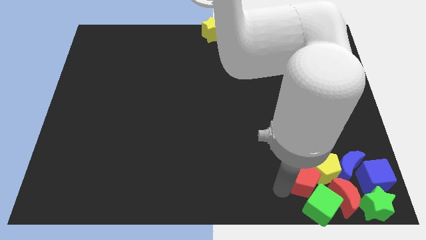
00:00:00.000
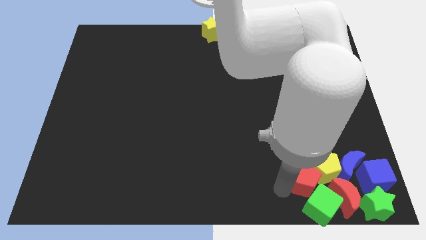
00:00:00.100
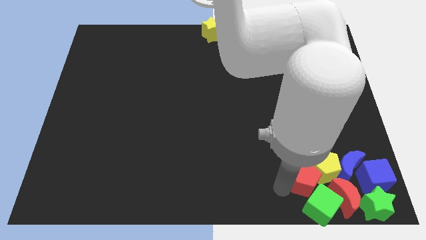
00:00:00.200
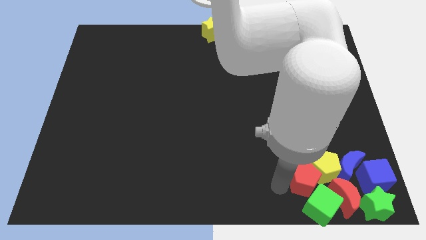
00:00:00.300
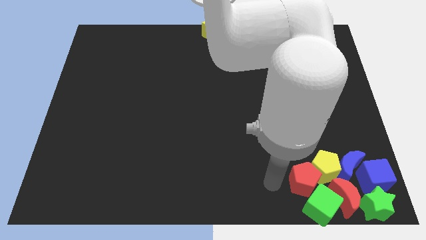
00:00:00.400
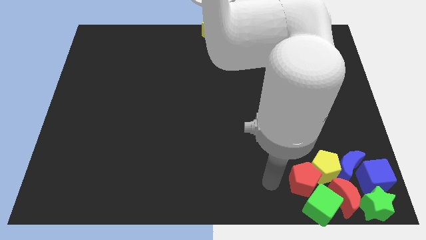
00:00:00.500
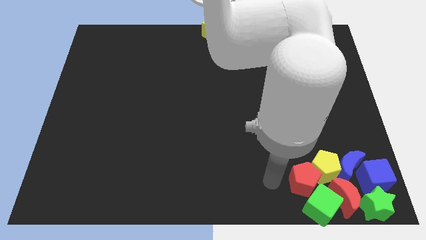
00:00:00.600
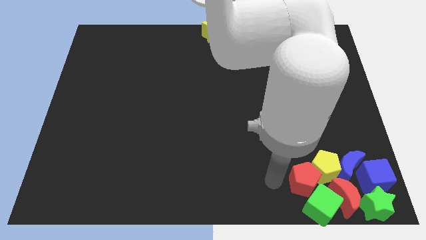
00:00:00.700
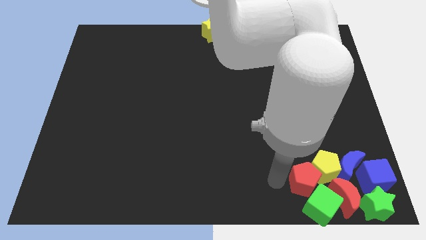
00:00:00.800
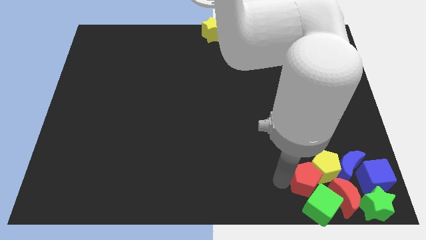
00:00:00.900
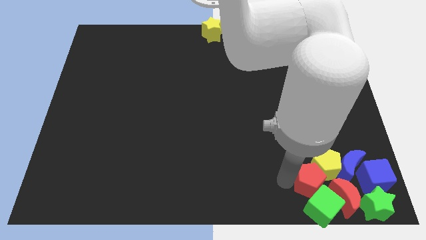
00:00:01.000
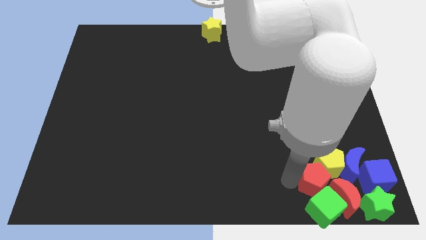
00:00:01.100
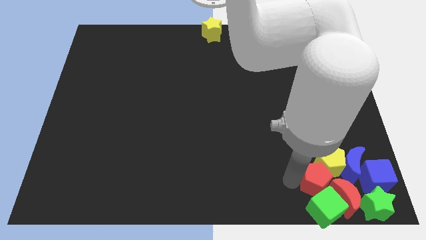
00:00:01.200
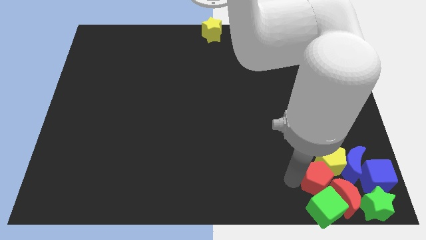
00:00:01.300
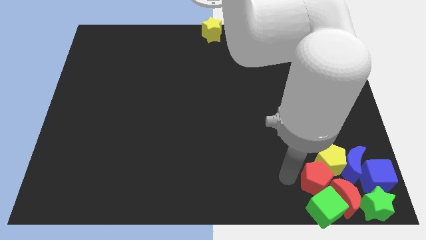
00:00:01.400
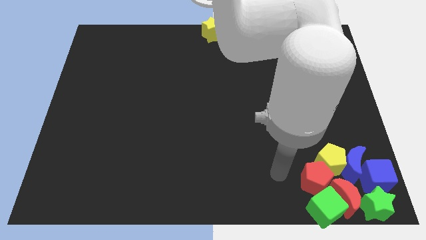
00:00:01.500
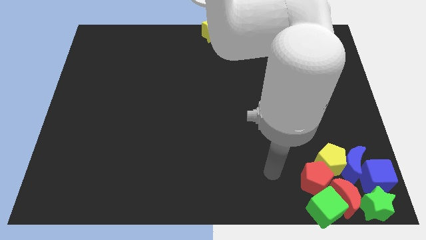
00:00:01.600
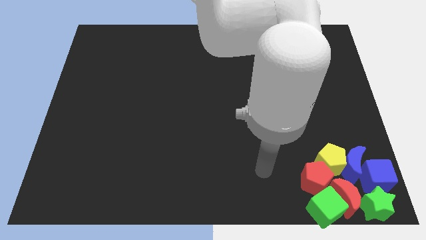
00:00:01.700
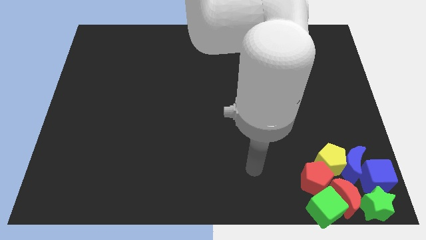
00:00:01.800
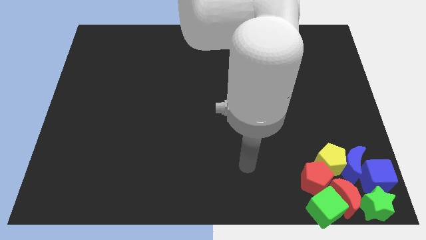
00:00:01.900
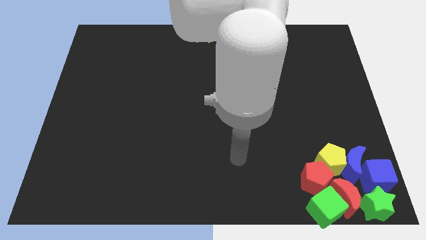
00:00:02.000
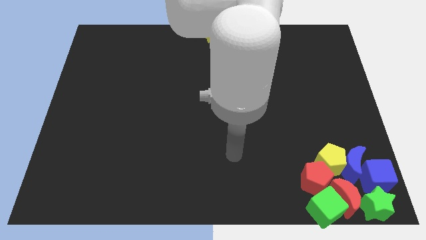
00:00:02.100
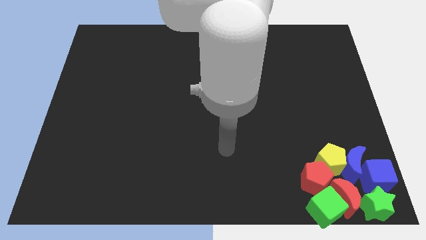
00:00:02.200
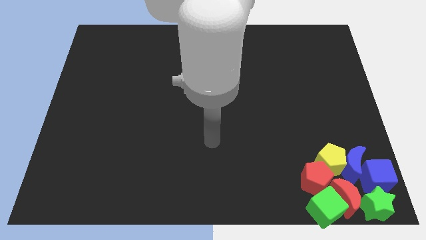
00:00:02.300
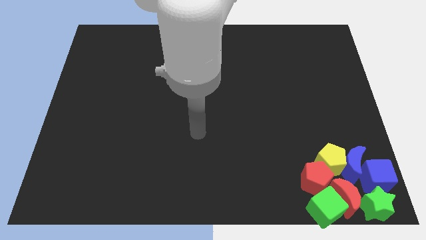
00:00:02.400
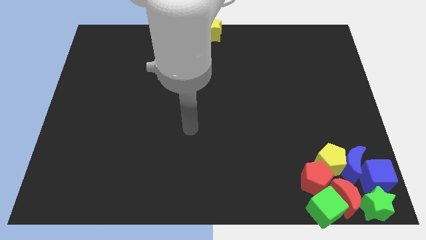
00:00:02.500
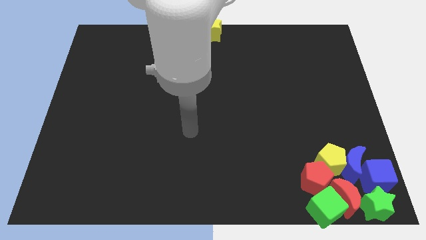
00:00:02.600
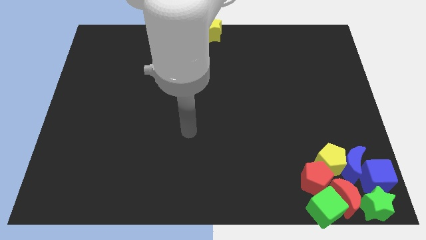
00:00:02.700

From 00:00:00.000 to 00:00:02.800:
push red pentagon in to group of blocks

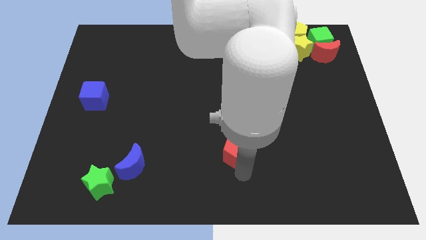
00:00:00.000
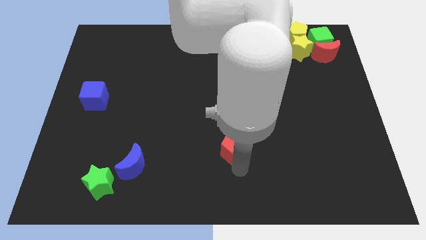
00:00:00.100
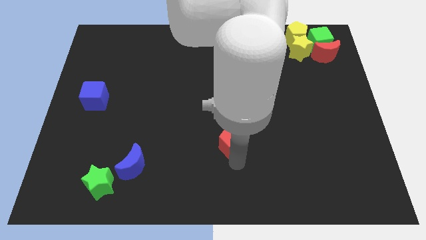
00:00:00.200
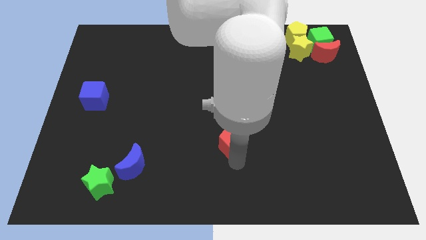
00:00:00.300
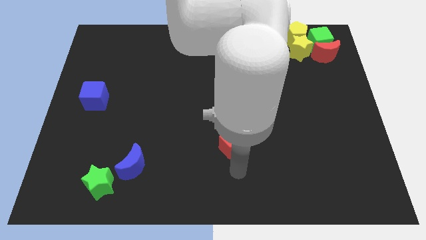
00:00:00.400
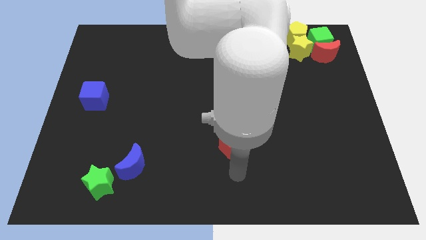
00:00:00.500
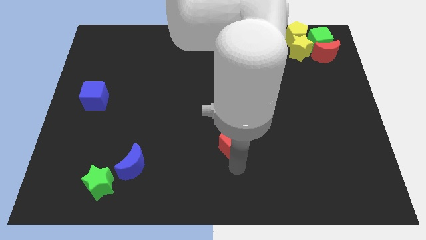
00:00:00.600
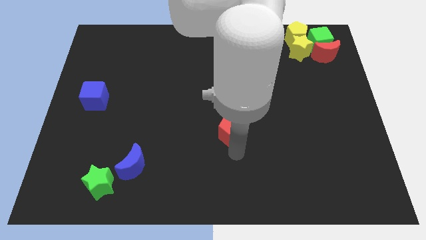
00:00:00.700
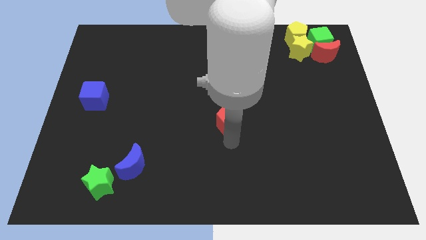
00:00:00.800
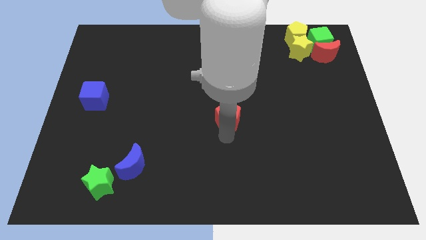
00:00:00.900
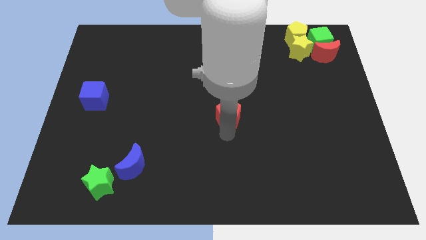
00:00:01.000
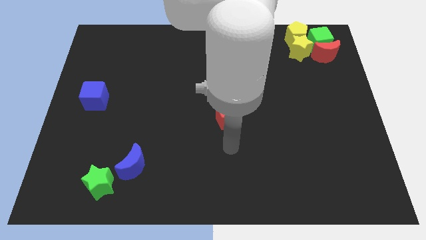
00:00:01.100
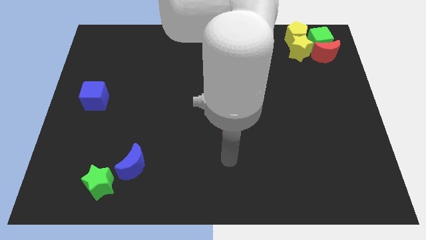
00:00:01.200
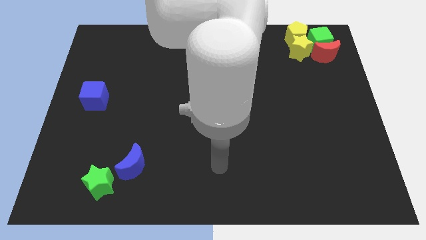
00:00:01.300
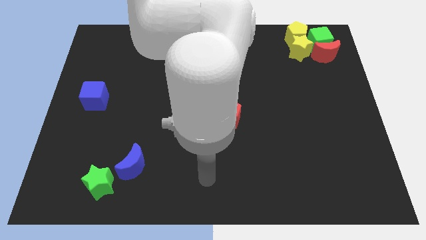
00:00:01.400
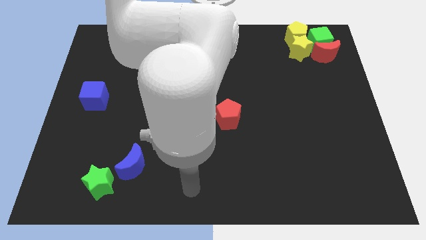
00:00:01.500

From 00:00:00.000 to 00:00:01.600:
push red pentagon towards the center of the board

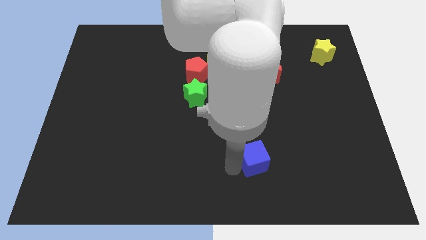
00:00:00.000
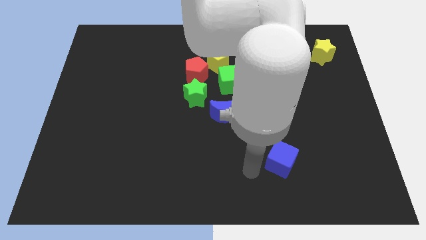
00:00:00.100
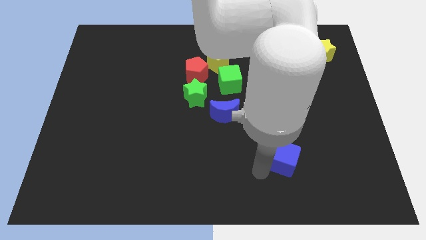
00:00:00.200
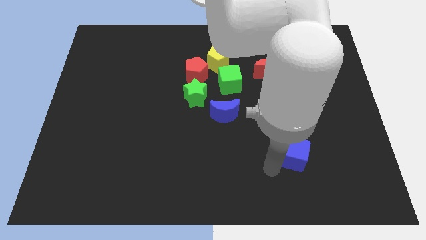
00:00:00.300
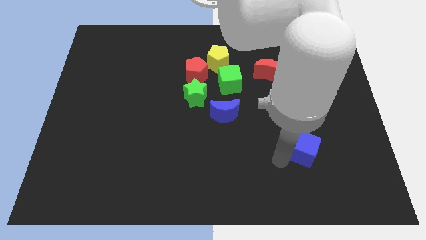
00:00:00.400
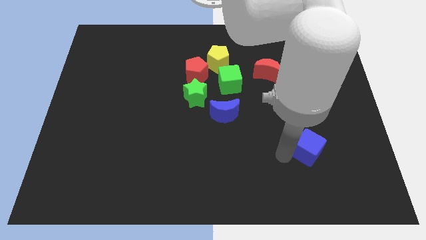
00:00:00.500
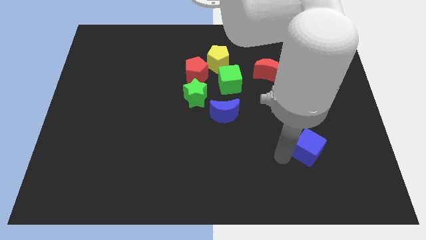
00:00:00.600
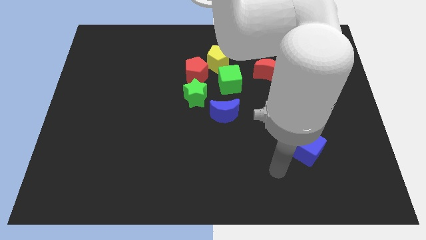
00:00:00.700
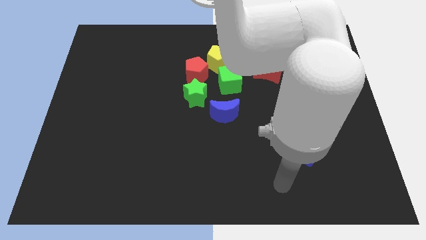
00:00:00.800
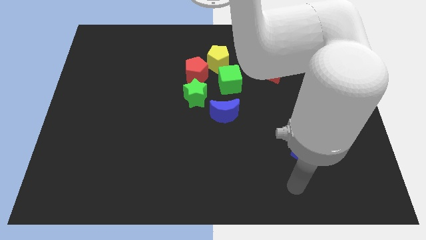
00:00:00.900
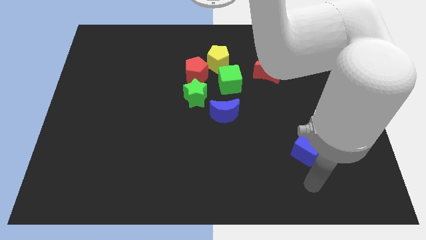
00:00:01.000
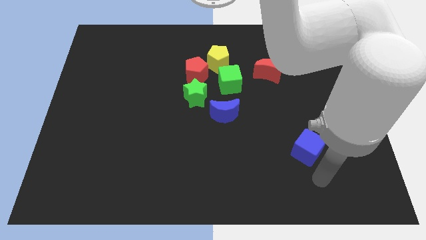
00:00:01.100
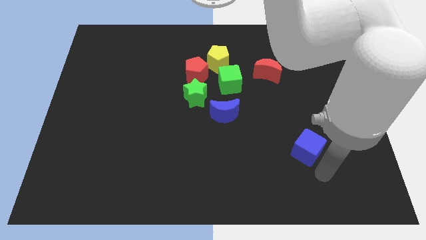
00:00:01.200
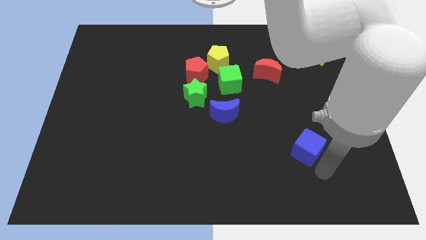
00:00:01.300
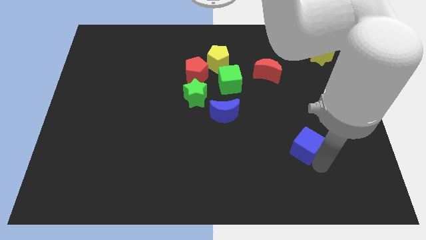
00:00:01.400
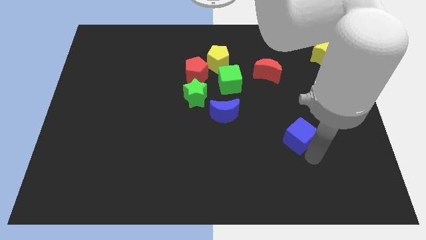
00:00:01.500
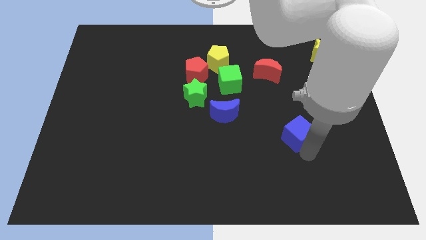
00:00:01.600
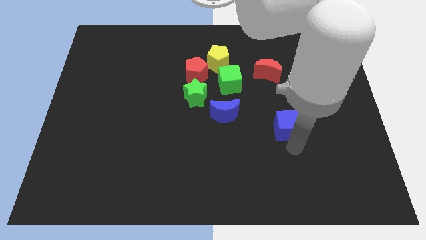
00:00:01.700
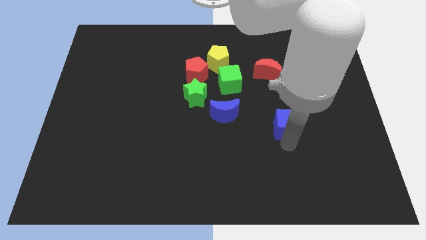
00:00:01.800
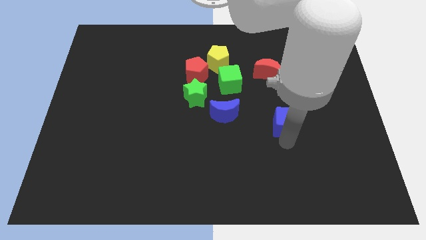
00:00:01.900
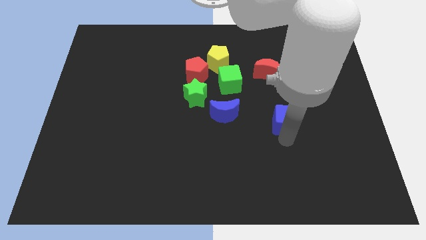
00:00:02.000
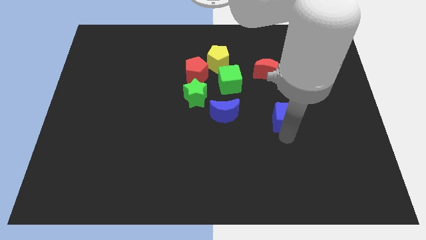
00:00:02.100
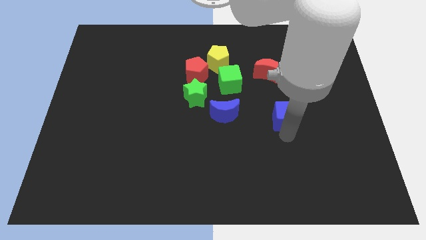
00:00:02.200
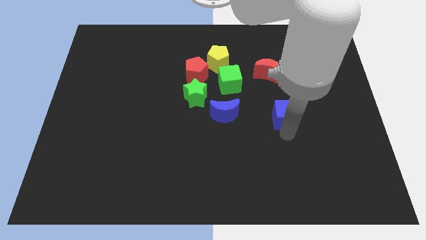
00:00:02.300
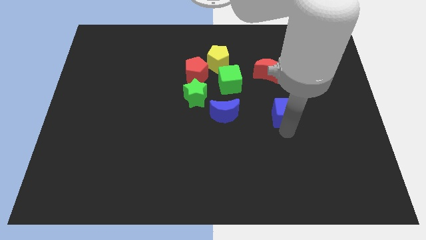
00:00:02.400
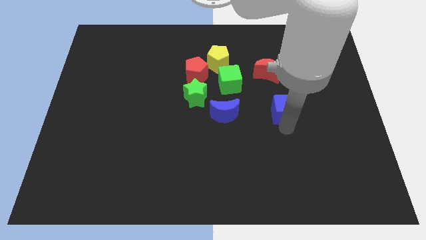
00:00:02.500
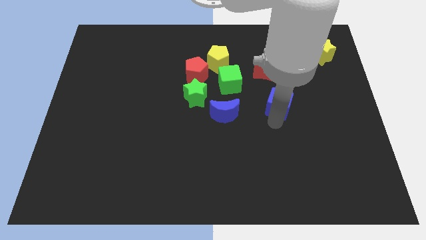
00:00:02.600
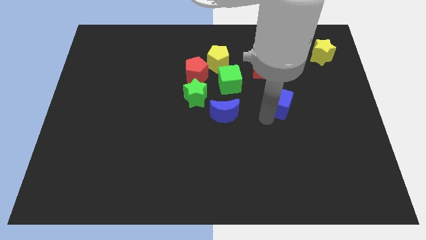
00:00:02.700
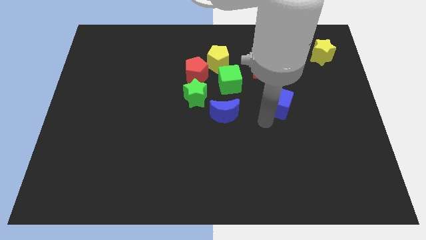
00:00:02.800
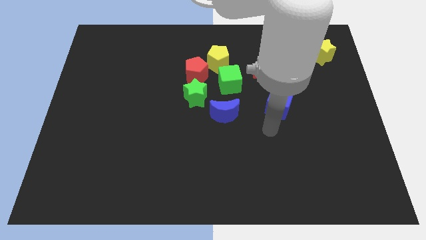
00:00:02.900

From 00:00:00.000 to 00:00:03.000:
push the blue cube below the red crescent

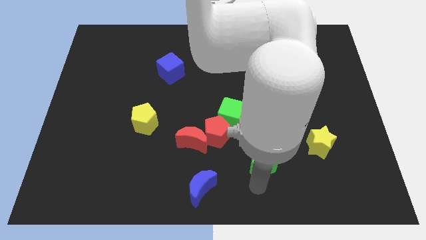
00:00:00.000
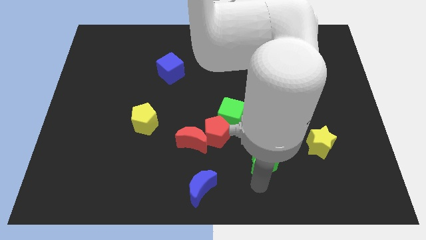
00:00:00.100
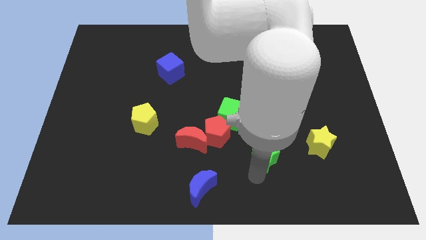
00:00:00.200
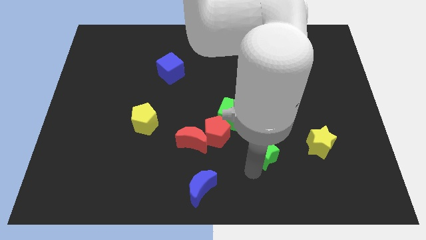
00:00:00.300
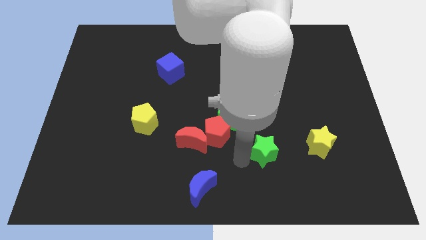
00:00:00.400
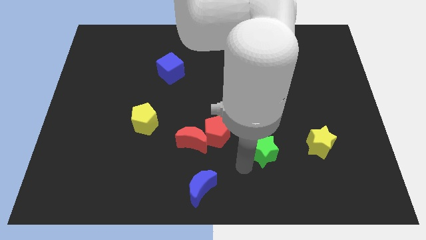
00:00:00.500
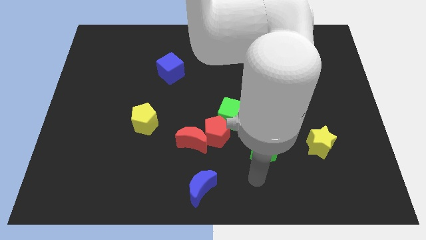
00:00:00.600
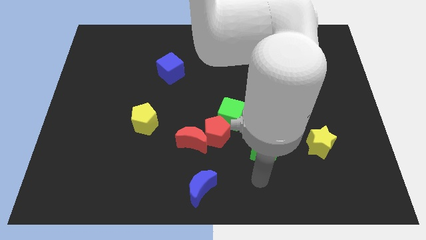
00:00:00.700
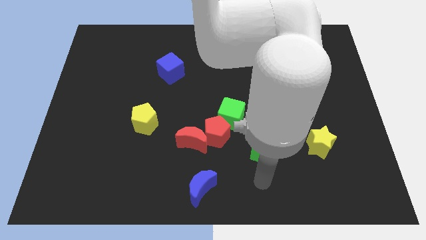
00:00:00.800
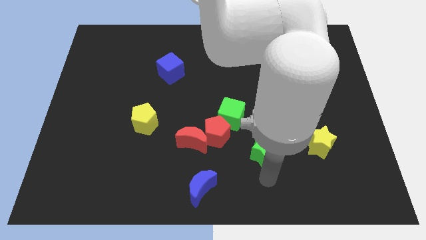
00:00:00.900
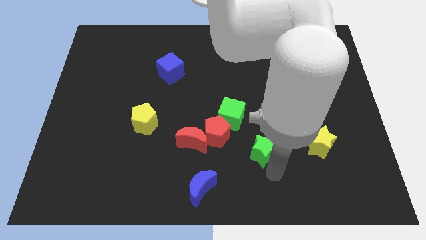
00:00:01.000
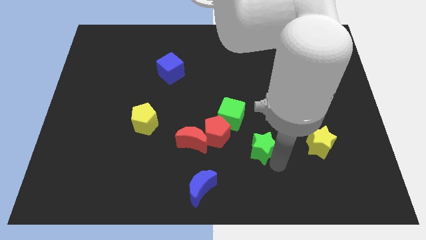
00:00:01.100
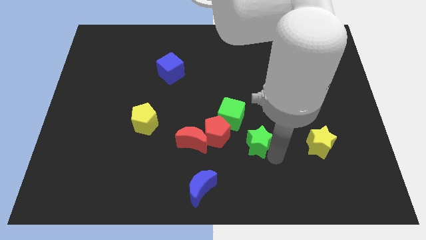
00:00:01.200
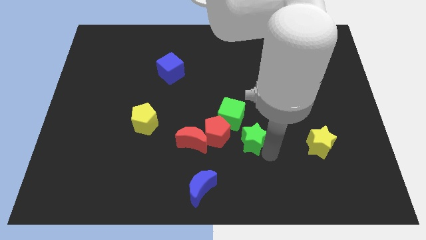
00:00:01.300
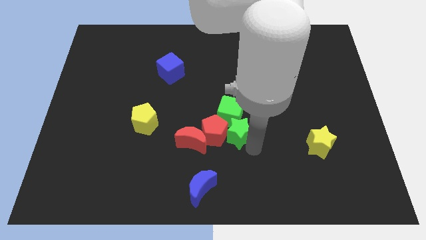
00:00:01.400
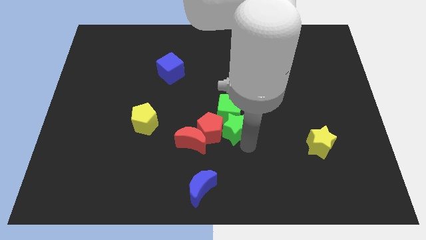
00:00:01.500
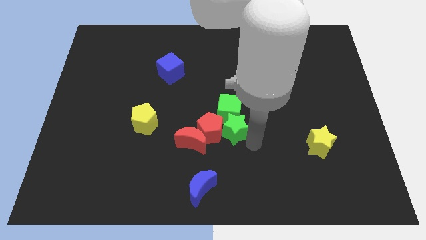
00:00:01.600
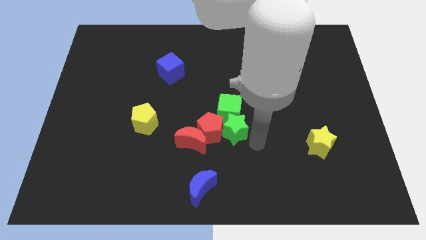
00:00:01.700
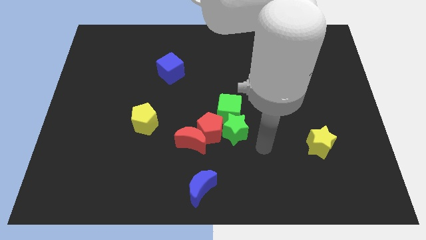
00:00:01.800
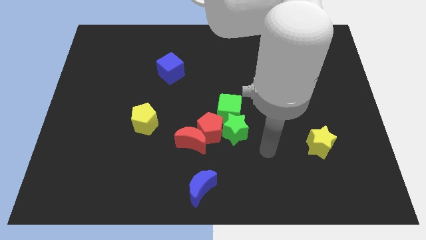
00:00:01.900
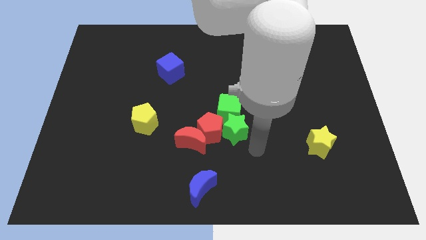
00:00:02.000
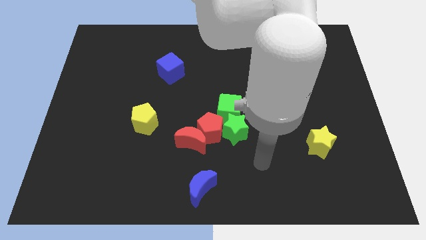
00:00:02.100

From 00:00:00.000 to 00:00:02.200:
put the green star into the green cube
